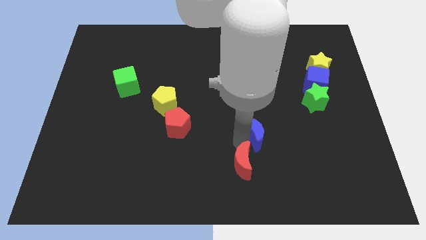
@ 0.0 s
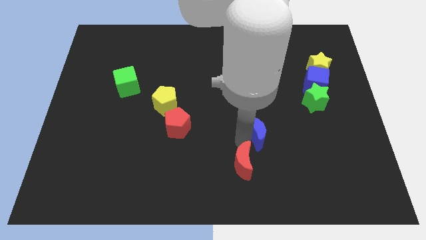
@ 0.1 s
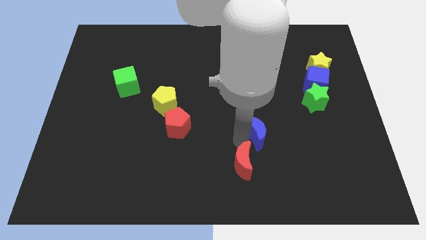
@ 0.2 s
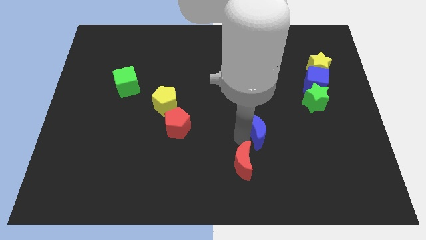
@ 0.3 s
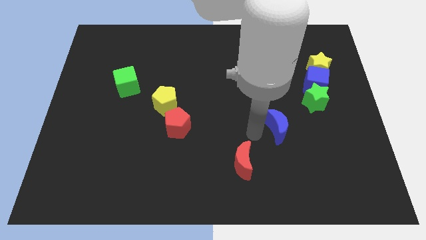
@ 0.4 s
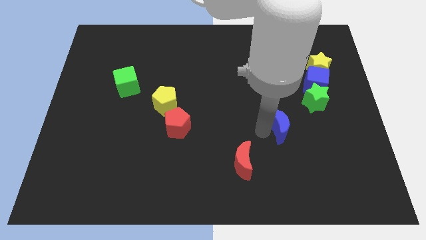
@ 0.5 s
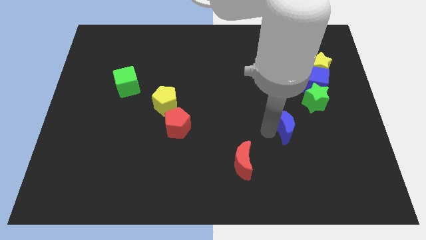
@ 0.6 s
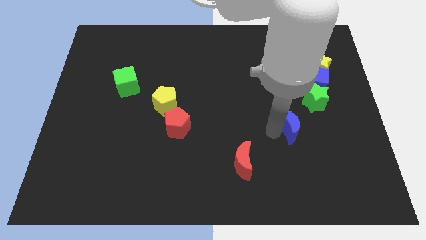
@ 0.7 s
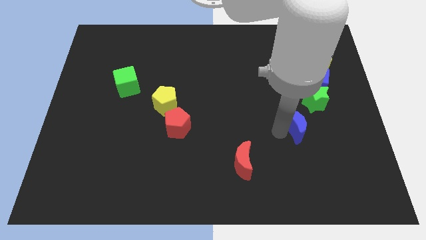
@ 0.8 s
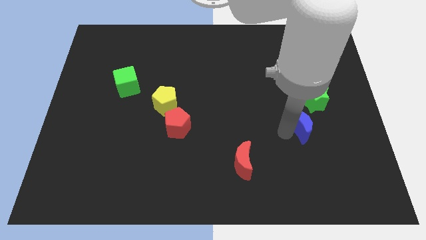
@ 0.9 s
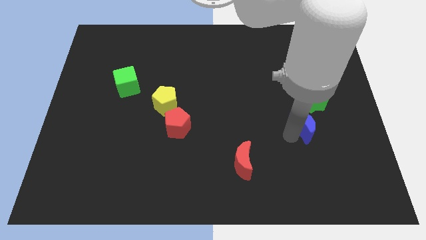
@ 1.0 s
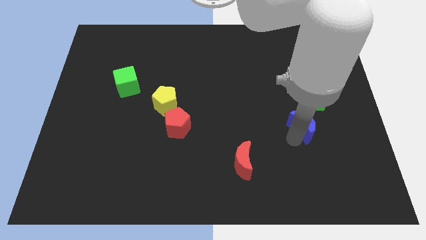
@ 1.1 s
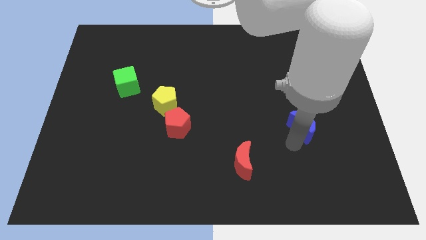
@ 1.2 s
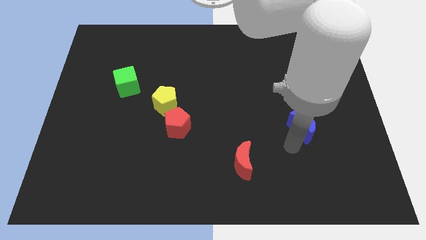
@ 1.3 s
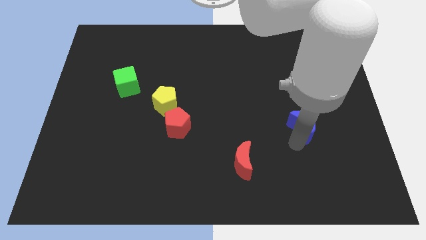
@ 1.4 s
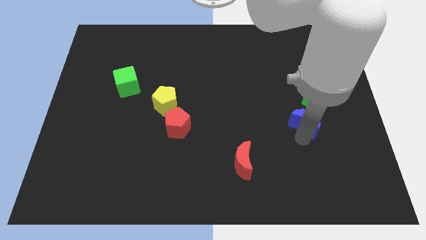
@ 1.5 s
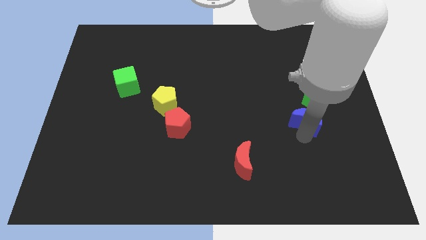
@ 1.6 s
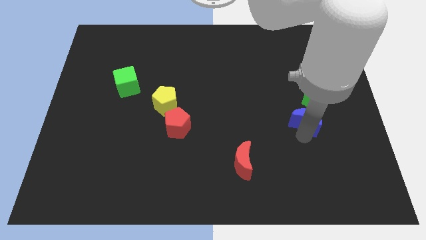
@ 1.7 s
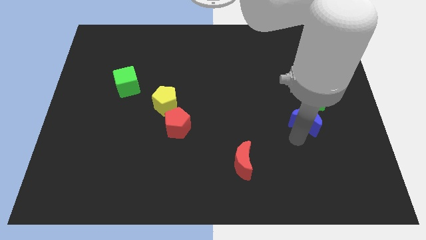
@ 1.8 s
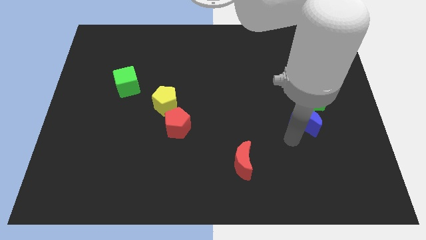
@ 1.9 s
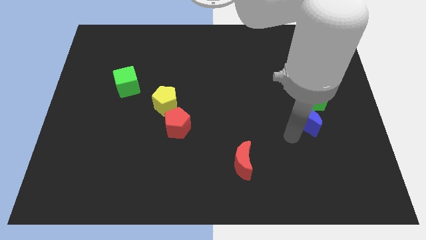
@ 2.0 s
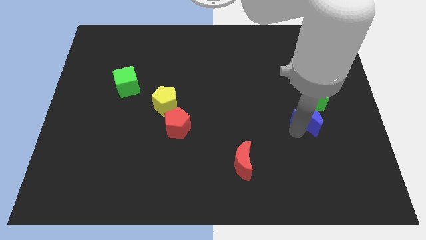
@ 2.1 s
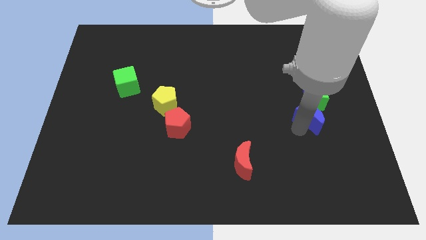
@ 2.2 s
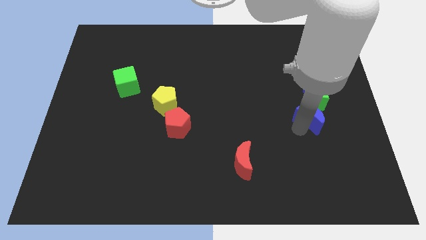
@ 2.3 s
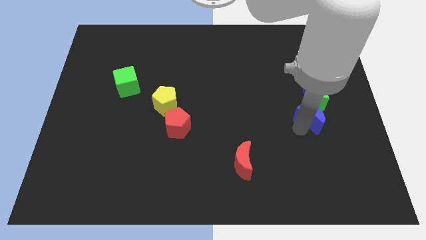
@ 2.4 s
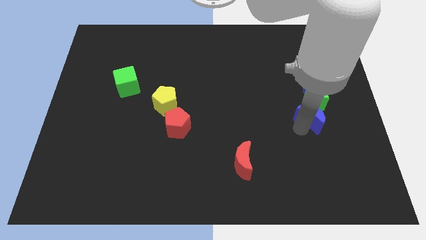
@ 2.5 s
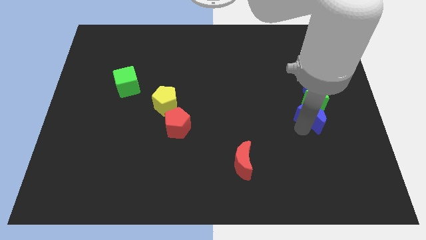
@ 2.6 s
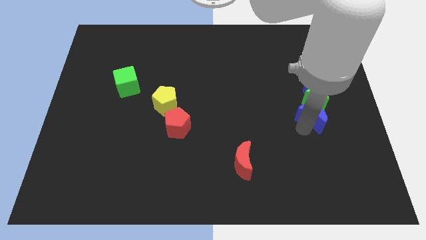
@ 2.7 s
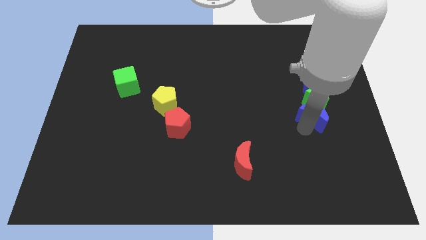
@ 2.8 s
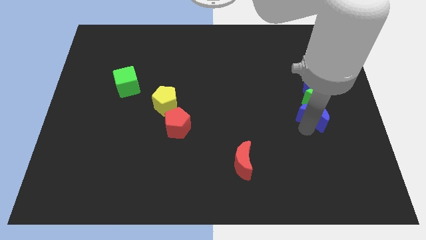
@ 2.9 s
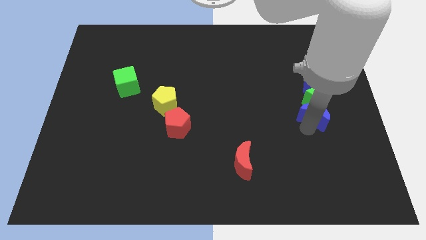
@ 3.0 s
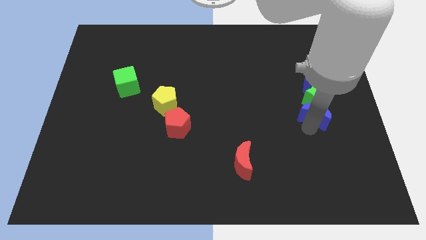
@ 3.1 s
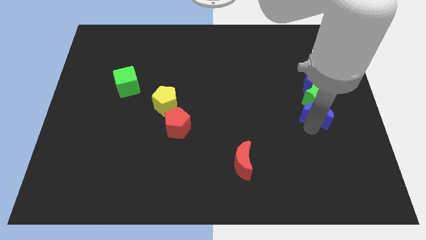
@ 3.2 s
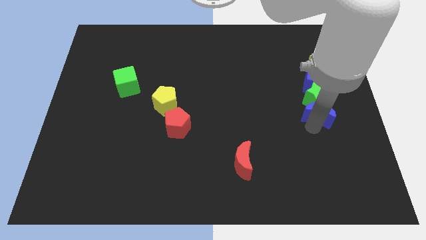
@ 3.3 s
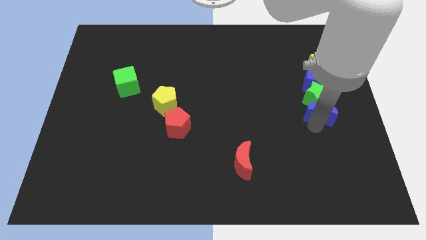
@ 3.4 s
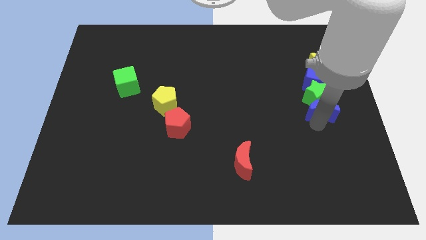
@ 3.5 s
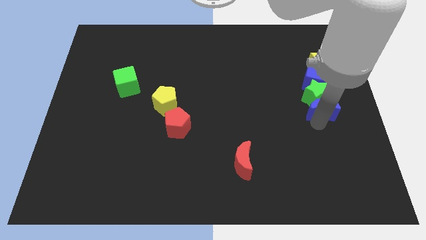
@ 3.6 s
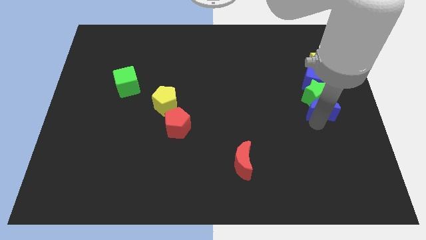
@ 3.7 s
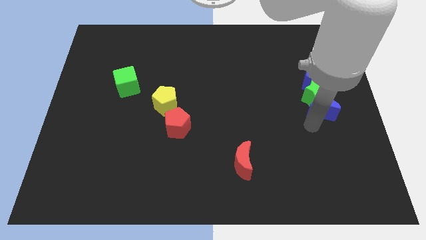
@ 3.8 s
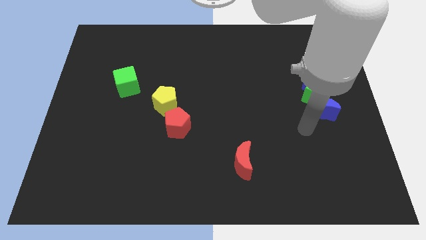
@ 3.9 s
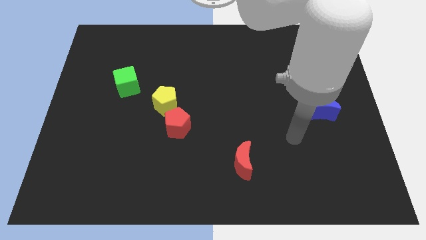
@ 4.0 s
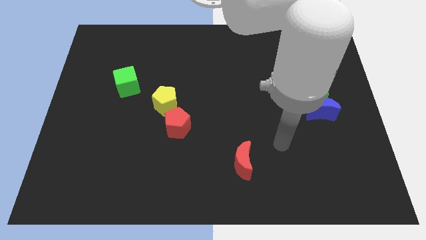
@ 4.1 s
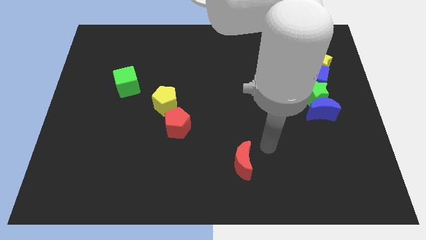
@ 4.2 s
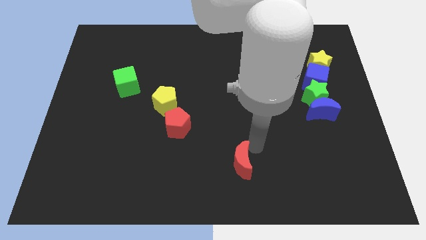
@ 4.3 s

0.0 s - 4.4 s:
place the blue crescent below the green star to form a vertical line

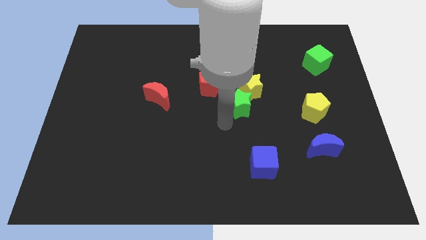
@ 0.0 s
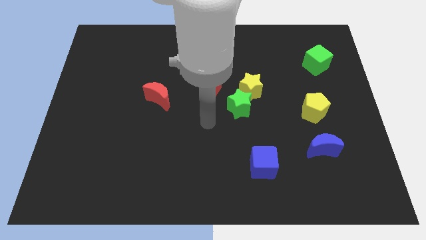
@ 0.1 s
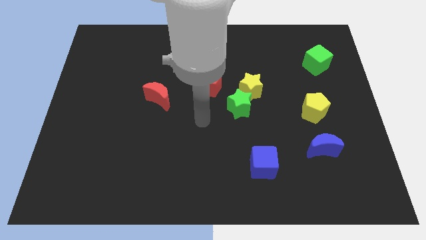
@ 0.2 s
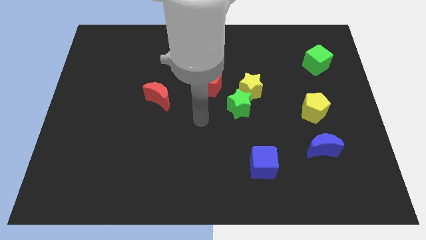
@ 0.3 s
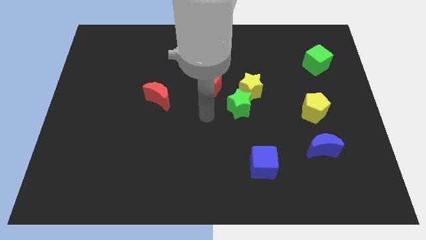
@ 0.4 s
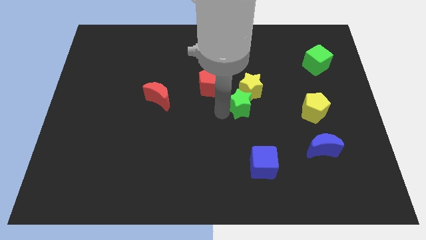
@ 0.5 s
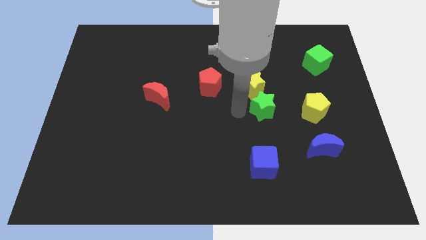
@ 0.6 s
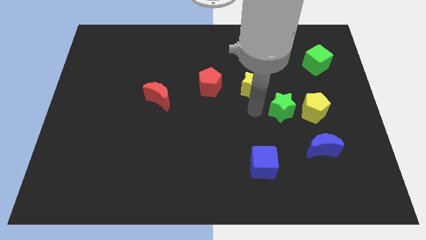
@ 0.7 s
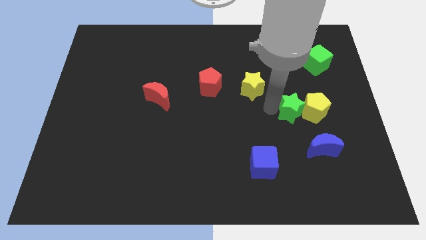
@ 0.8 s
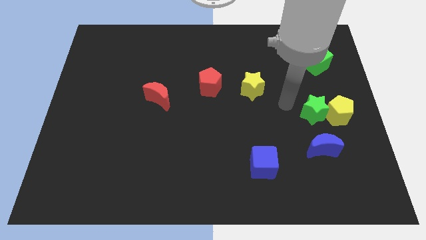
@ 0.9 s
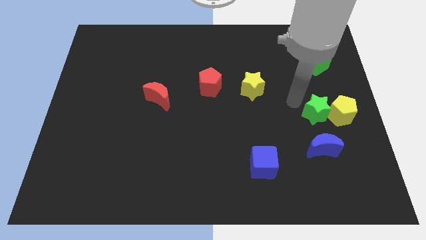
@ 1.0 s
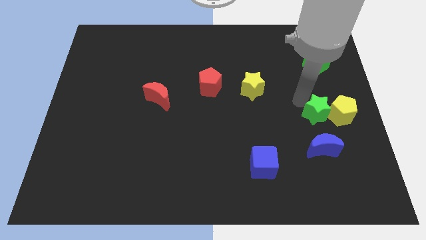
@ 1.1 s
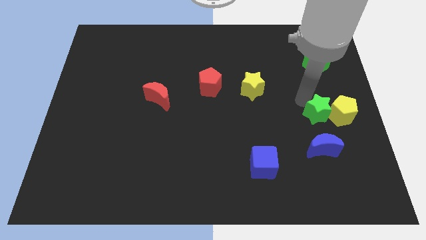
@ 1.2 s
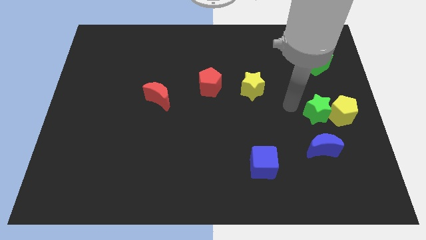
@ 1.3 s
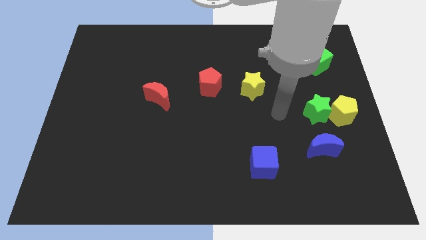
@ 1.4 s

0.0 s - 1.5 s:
place the green star and yellow pentagon at the top of blue moon

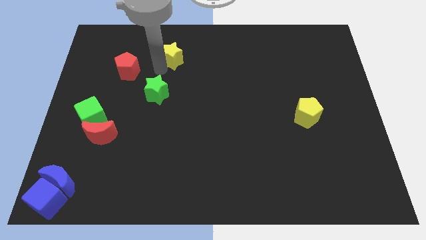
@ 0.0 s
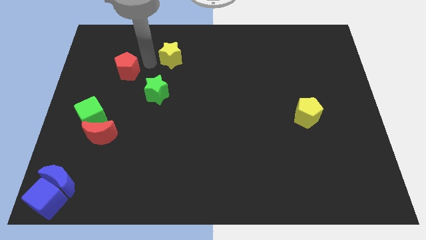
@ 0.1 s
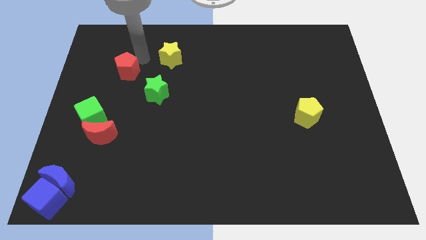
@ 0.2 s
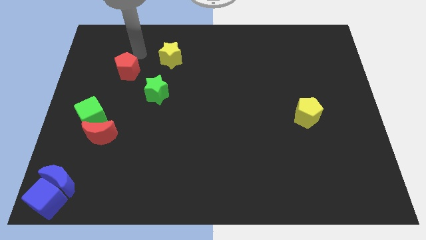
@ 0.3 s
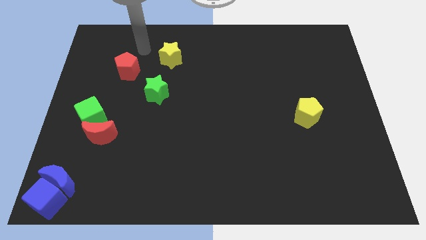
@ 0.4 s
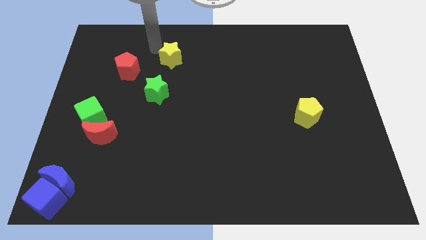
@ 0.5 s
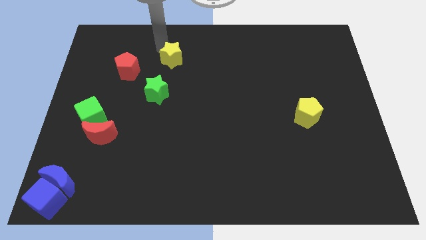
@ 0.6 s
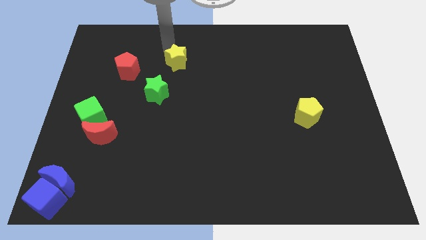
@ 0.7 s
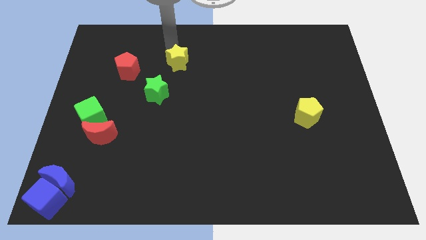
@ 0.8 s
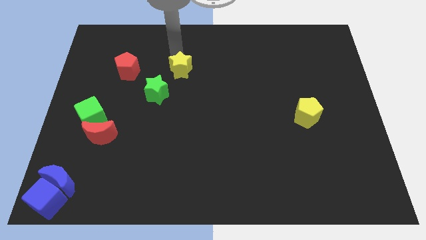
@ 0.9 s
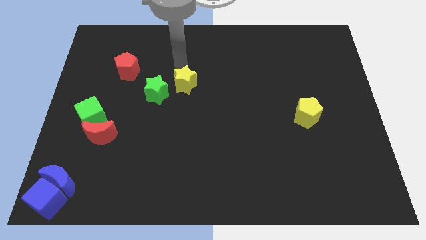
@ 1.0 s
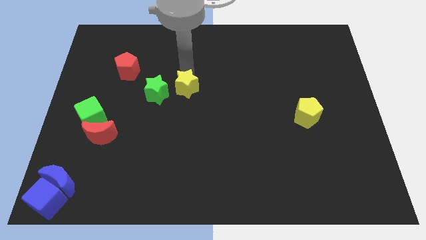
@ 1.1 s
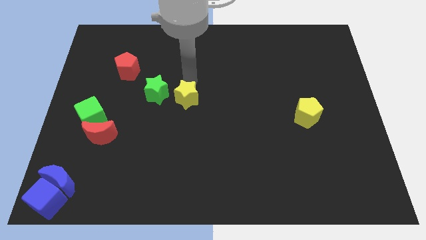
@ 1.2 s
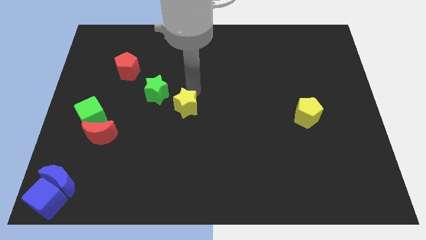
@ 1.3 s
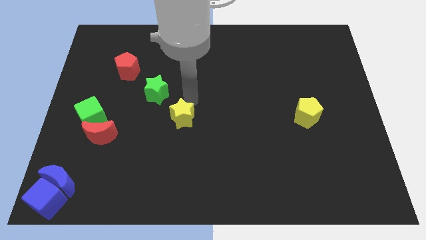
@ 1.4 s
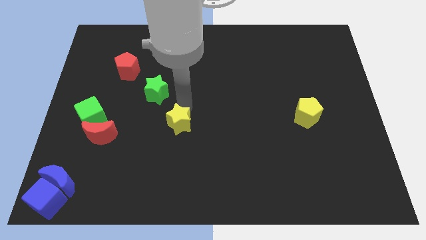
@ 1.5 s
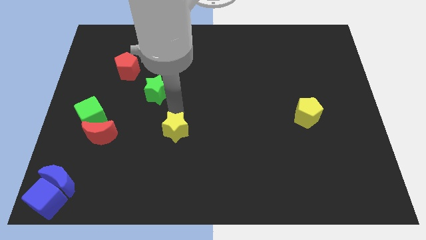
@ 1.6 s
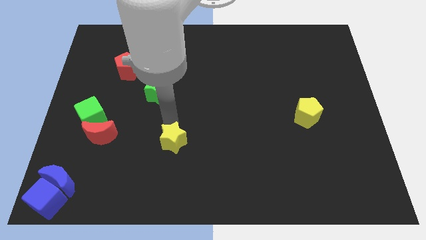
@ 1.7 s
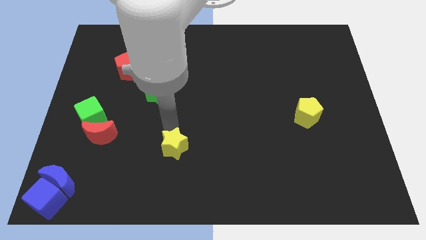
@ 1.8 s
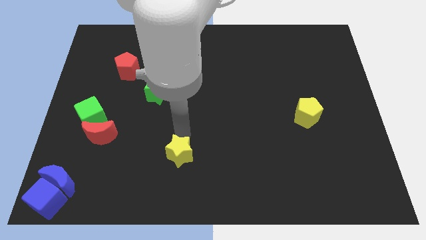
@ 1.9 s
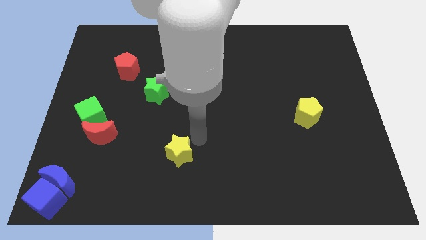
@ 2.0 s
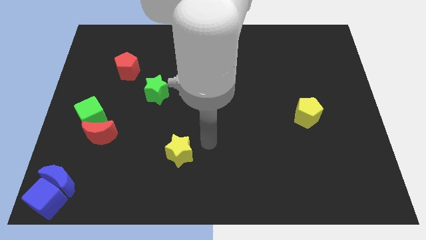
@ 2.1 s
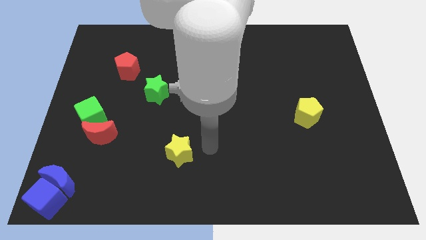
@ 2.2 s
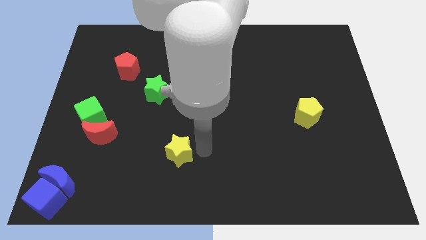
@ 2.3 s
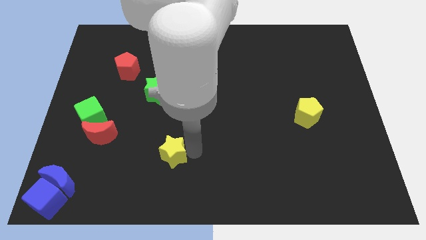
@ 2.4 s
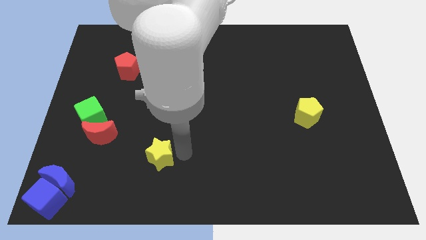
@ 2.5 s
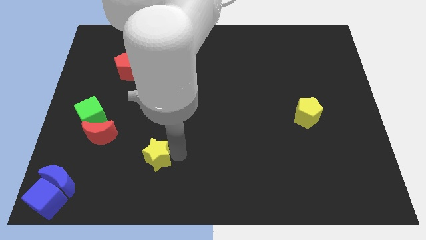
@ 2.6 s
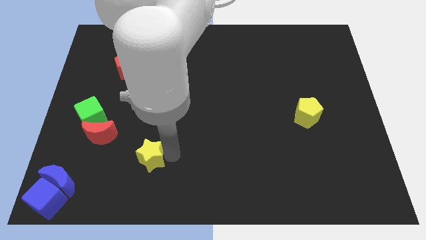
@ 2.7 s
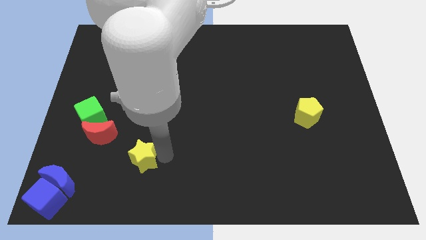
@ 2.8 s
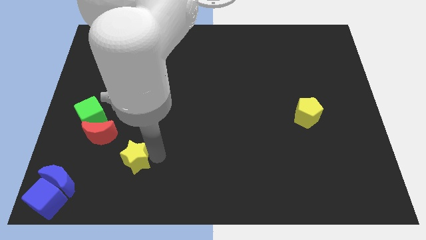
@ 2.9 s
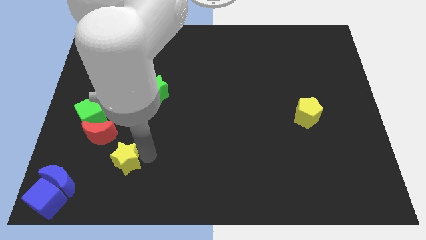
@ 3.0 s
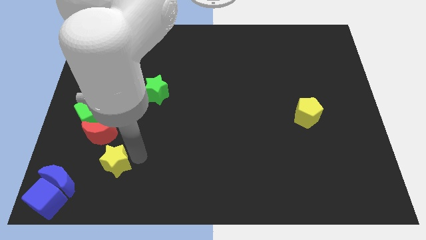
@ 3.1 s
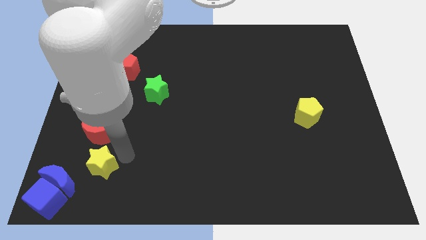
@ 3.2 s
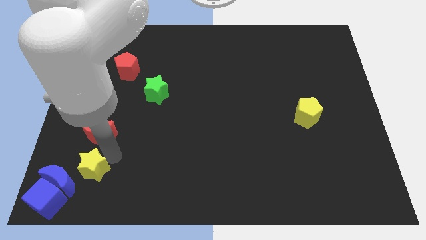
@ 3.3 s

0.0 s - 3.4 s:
push the yellow star to the bottom of the red crescent
